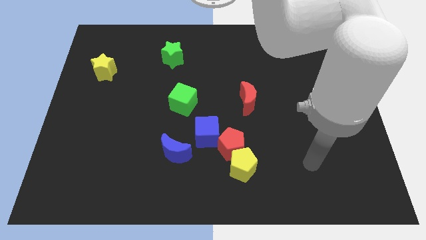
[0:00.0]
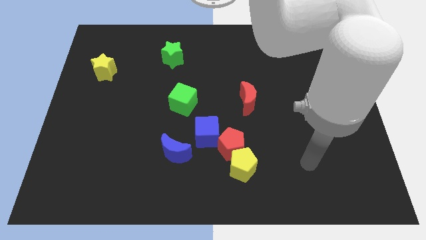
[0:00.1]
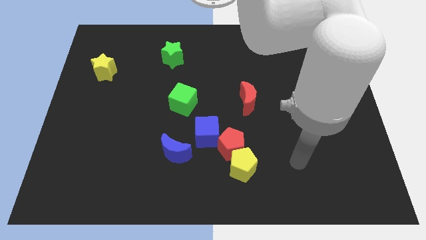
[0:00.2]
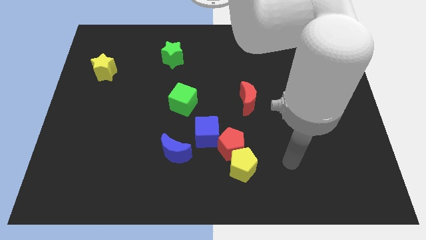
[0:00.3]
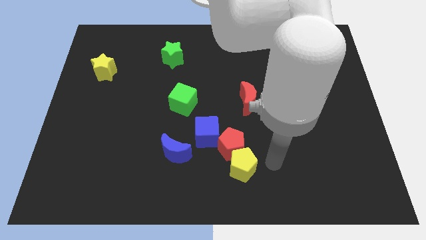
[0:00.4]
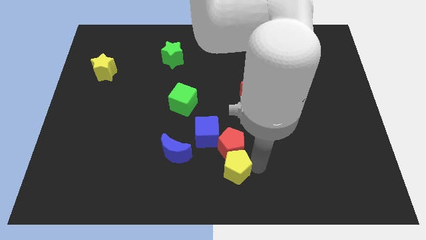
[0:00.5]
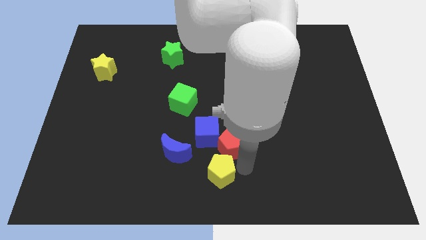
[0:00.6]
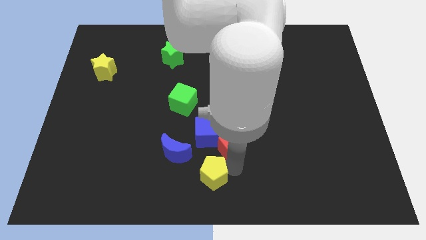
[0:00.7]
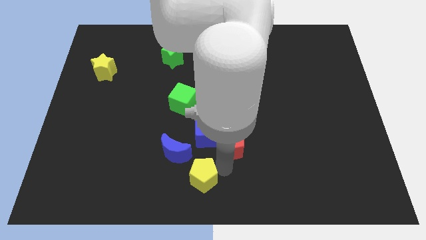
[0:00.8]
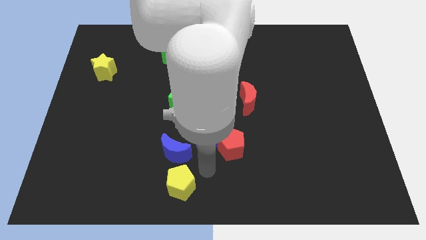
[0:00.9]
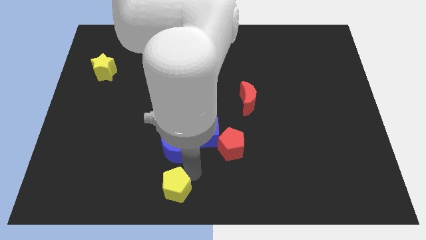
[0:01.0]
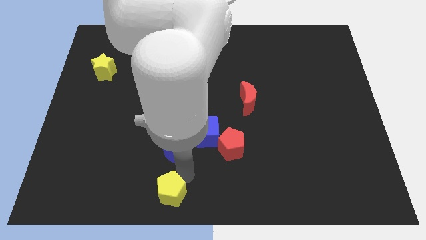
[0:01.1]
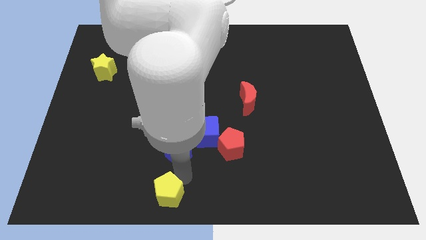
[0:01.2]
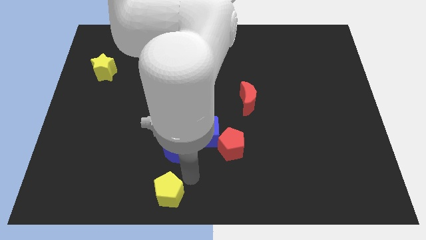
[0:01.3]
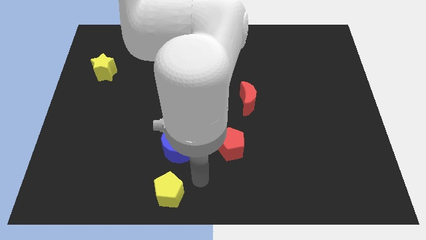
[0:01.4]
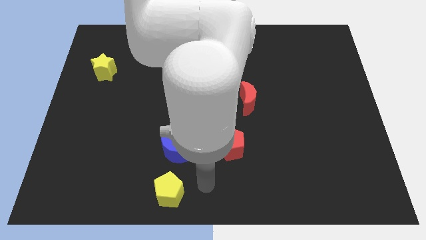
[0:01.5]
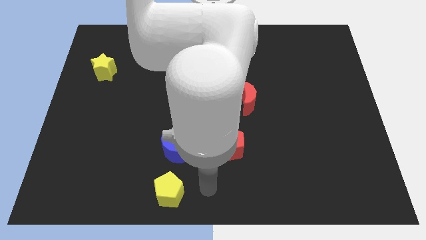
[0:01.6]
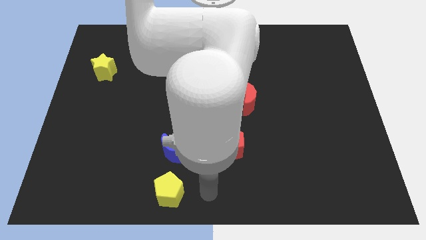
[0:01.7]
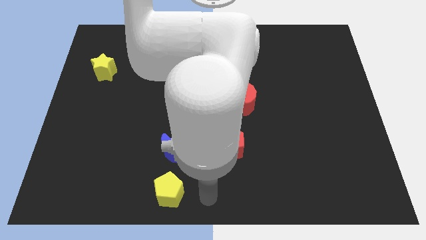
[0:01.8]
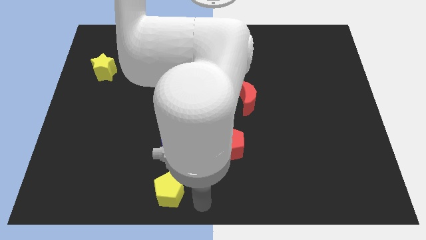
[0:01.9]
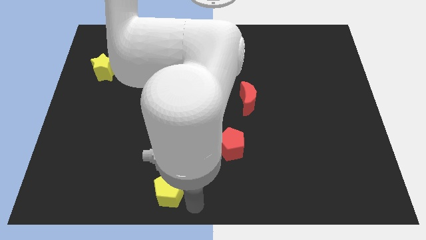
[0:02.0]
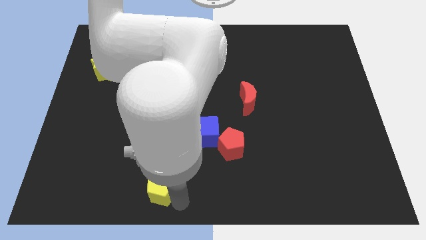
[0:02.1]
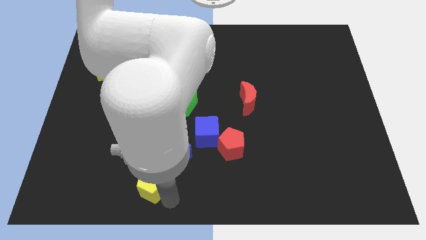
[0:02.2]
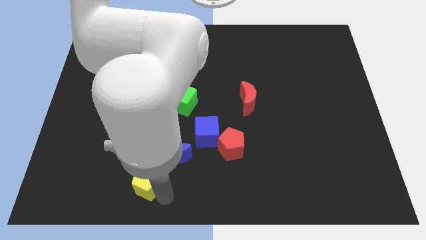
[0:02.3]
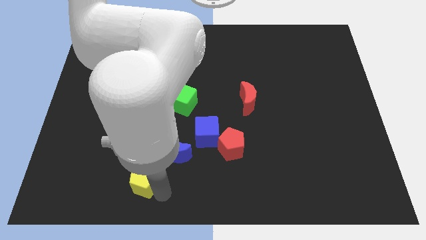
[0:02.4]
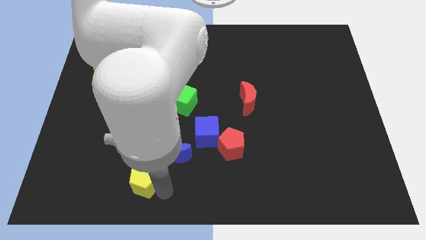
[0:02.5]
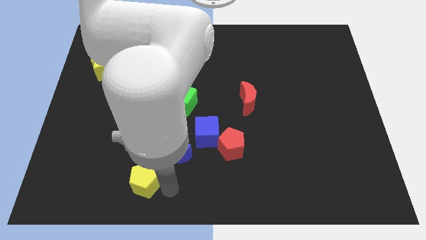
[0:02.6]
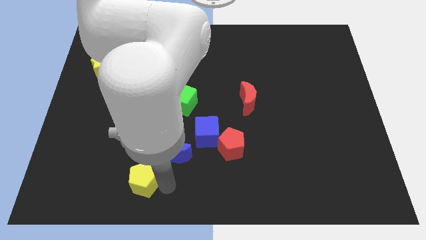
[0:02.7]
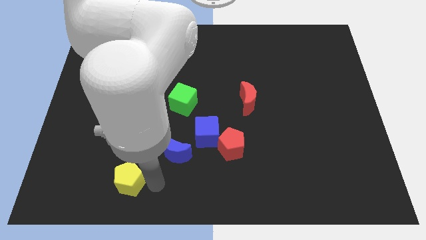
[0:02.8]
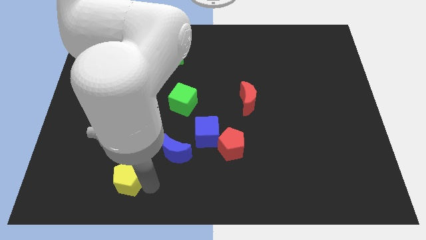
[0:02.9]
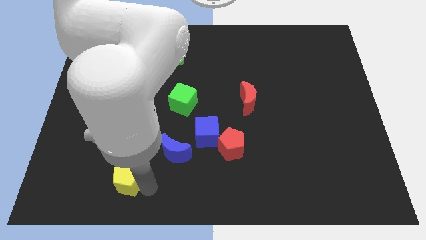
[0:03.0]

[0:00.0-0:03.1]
move the yellow pentagon to the left side

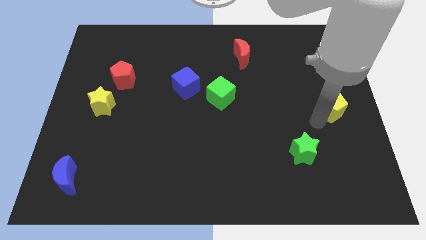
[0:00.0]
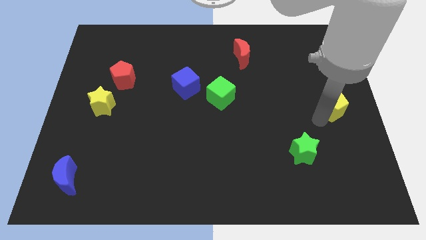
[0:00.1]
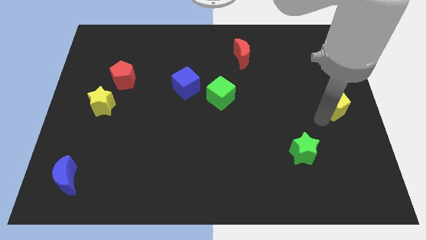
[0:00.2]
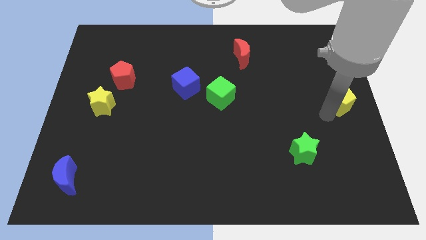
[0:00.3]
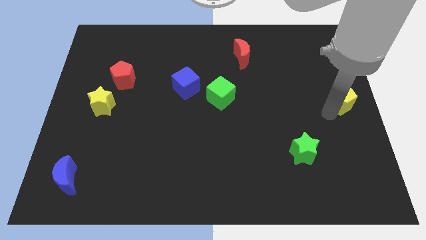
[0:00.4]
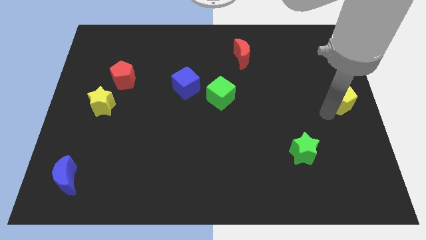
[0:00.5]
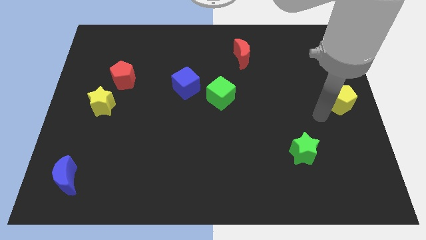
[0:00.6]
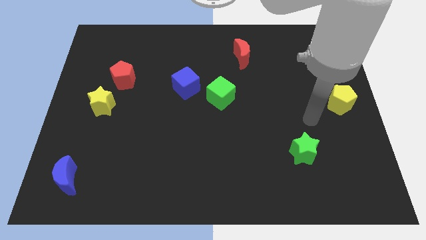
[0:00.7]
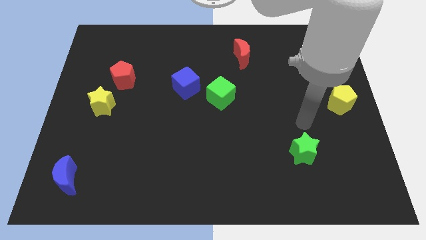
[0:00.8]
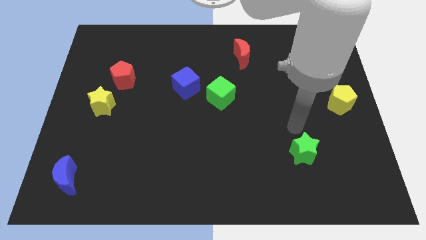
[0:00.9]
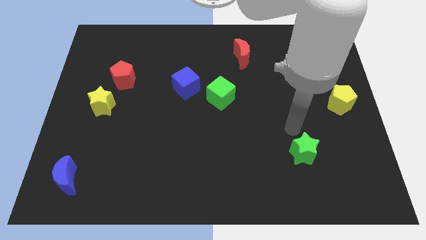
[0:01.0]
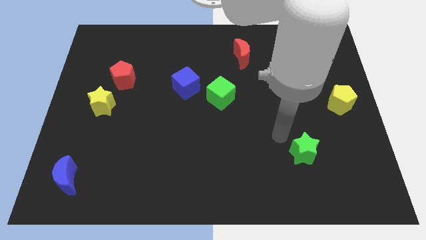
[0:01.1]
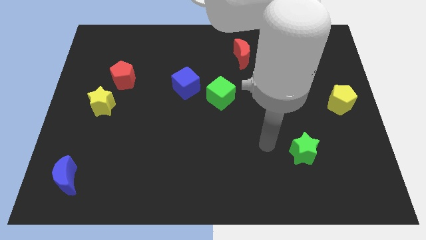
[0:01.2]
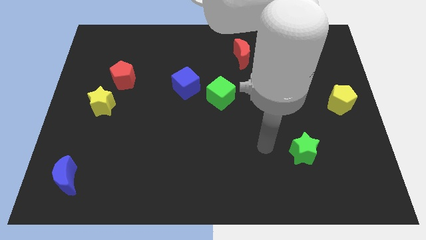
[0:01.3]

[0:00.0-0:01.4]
push the yellow pentagon towards the right center of the board

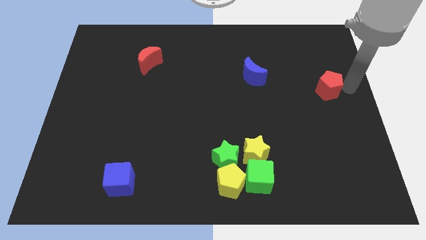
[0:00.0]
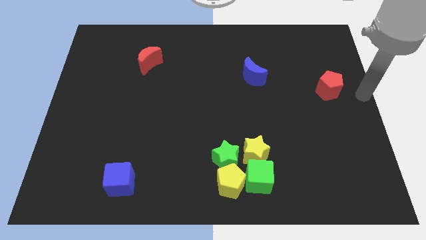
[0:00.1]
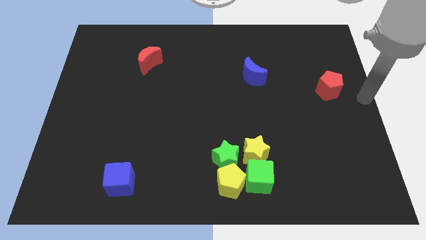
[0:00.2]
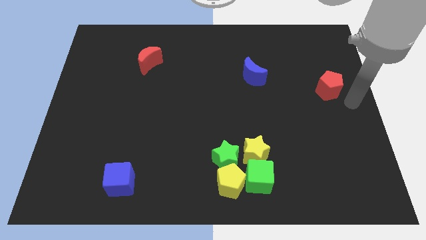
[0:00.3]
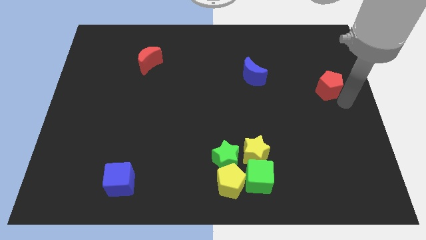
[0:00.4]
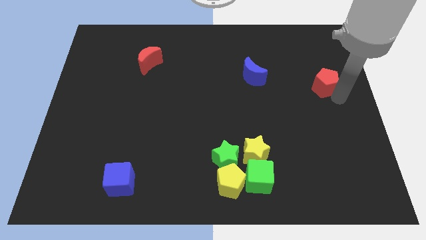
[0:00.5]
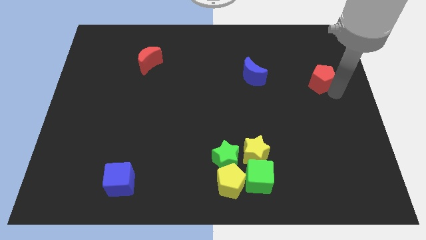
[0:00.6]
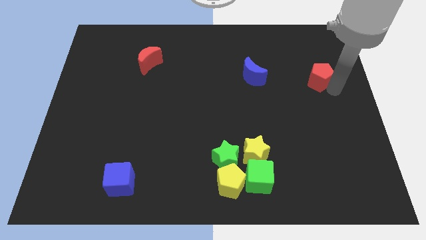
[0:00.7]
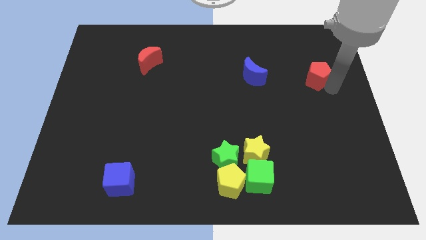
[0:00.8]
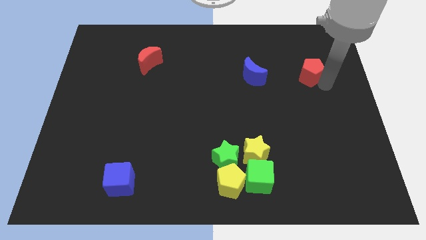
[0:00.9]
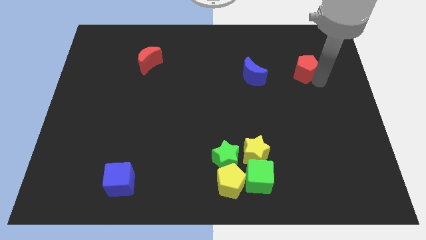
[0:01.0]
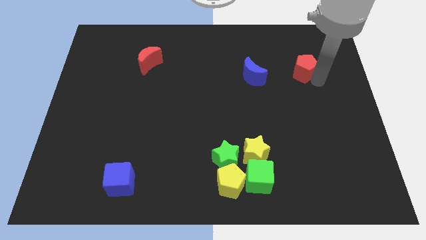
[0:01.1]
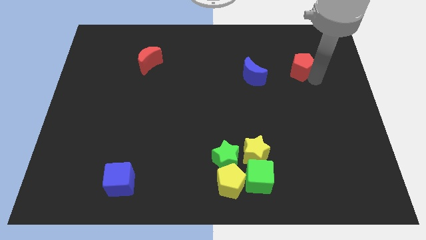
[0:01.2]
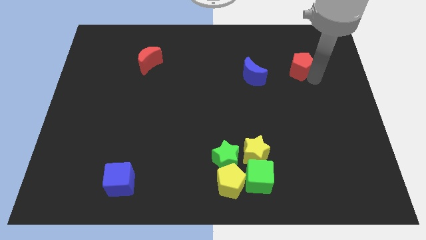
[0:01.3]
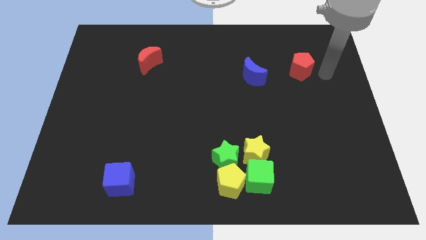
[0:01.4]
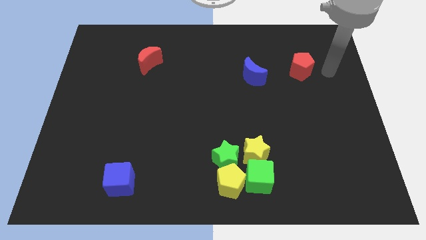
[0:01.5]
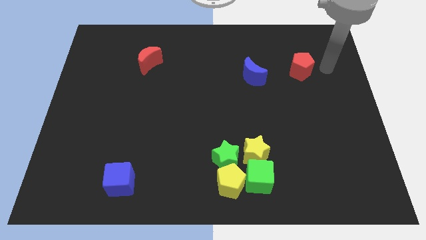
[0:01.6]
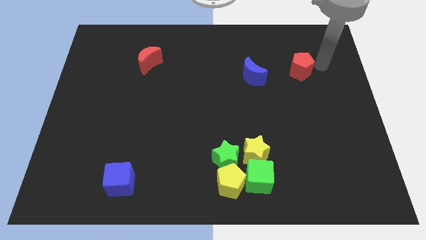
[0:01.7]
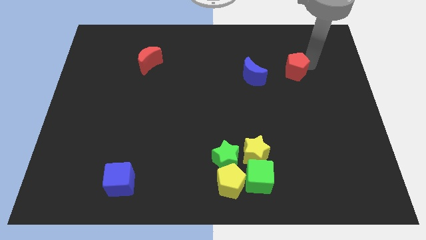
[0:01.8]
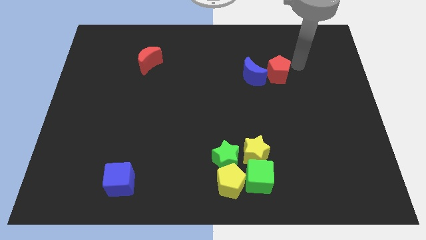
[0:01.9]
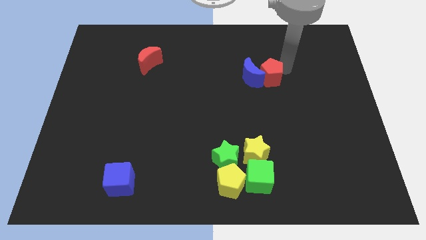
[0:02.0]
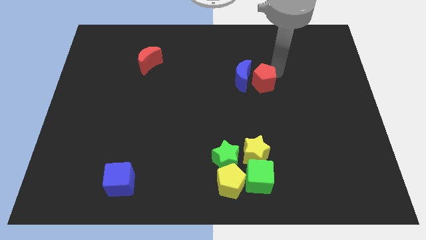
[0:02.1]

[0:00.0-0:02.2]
push red pentagon into blue moon

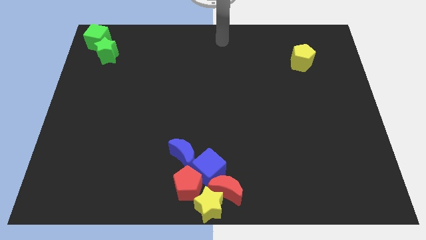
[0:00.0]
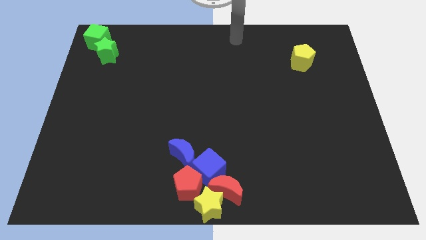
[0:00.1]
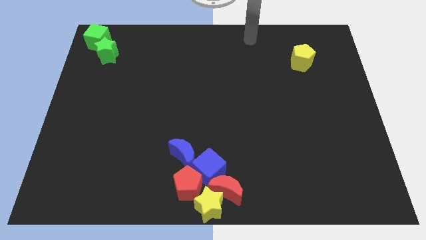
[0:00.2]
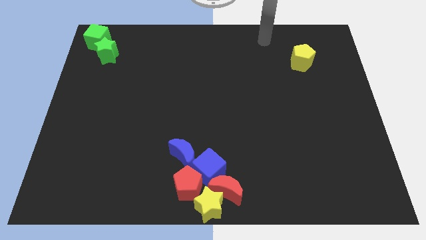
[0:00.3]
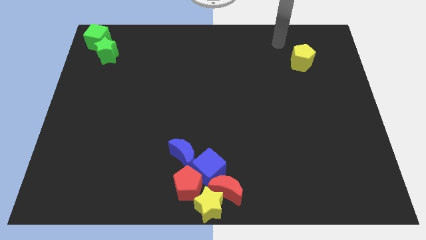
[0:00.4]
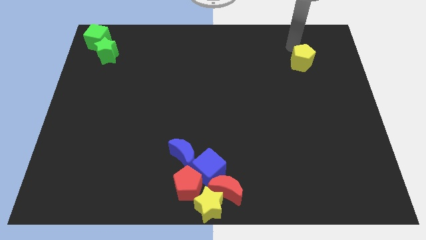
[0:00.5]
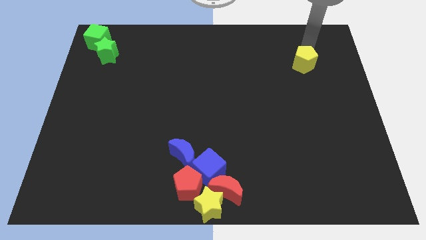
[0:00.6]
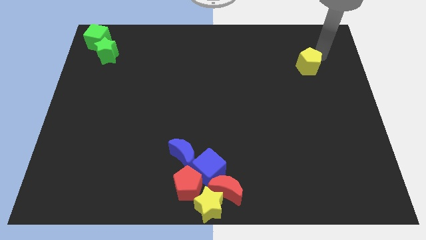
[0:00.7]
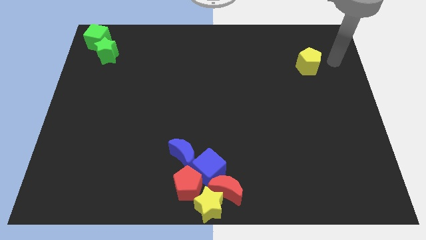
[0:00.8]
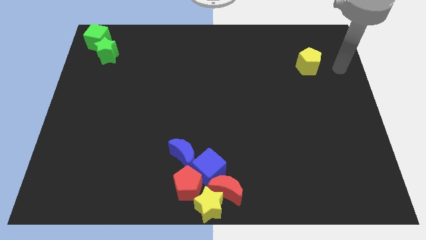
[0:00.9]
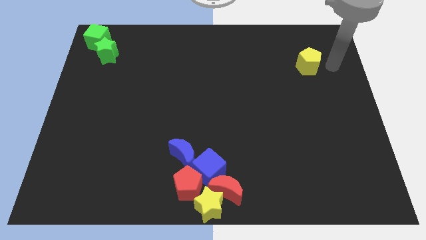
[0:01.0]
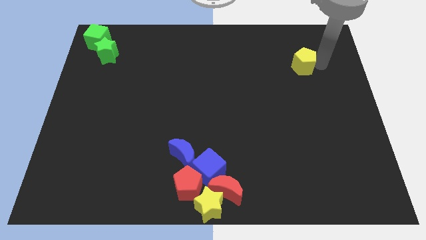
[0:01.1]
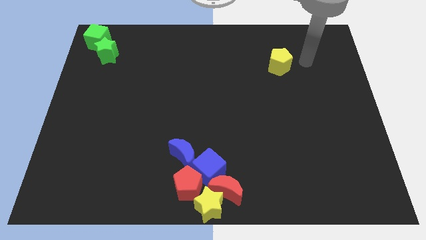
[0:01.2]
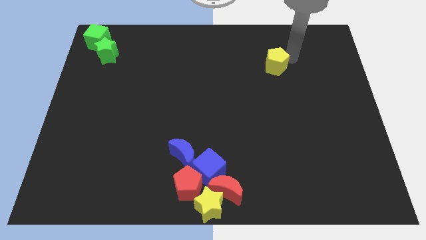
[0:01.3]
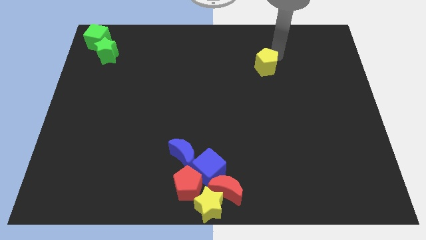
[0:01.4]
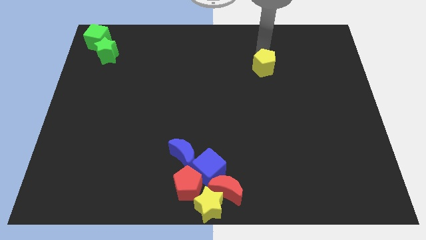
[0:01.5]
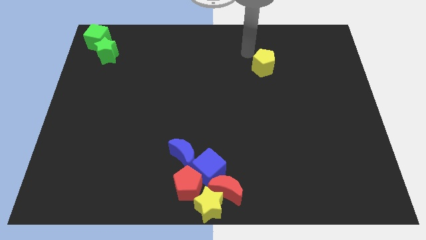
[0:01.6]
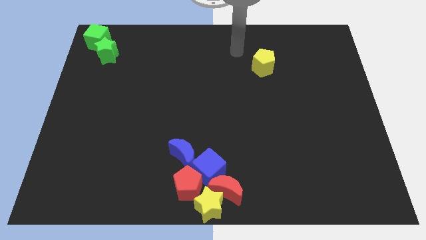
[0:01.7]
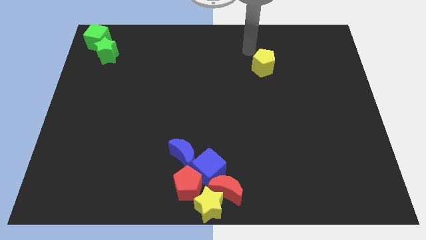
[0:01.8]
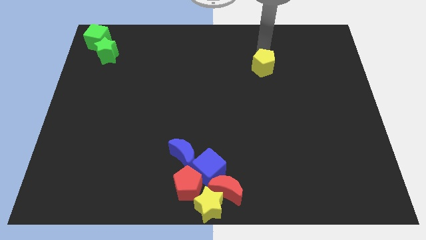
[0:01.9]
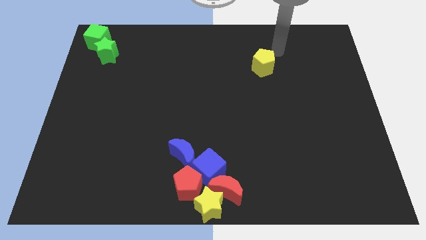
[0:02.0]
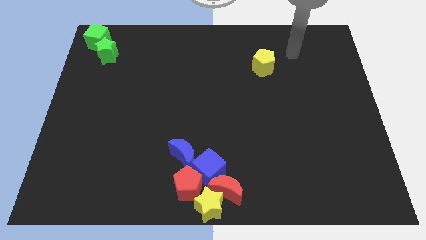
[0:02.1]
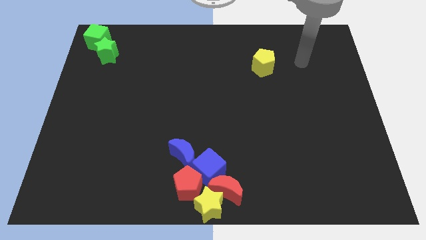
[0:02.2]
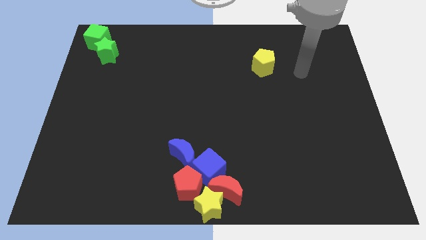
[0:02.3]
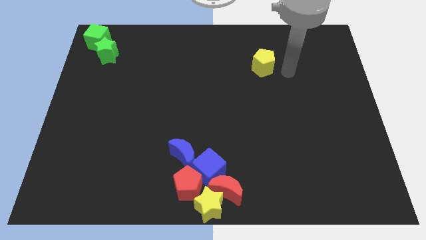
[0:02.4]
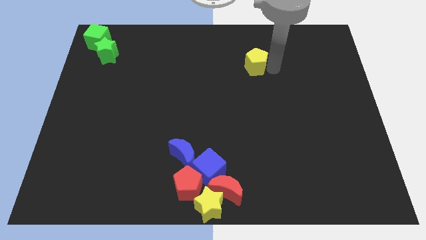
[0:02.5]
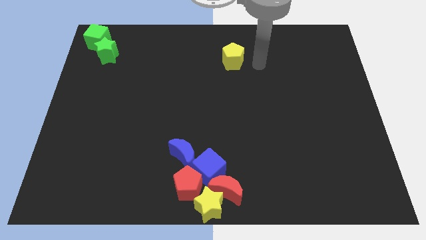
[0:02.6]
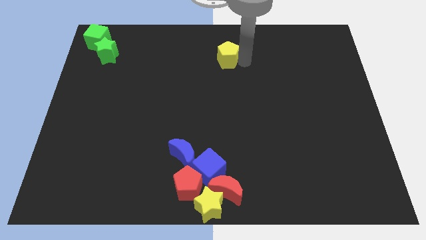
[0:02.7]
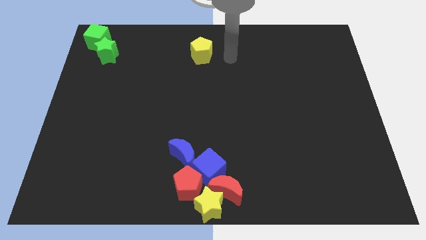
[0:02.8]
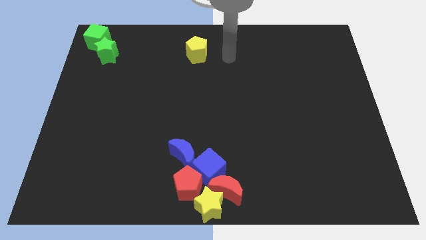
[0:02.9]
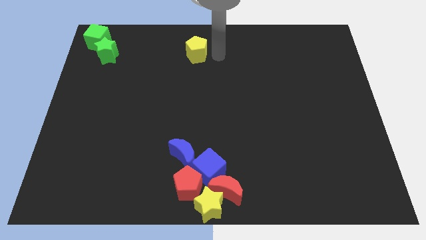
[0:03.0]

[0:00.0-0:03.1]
move the yellow pentagon towards the top center of the board
